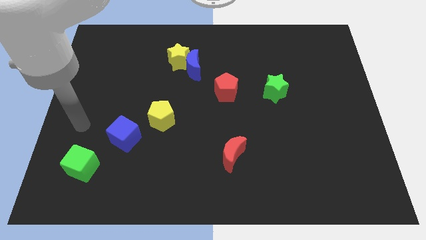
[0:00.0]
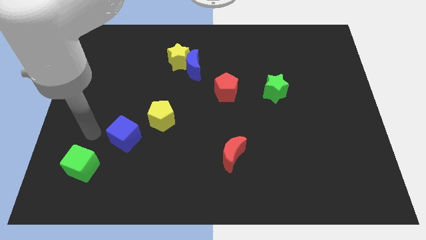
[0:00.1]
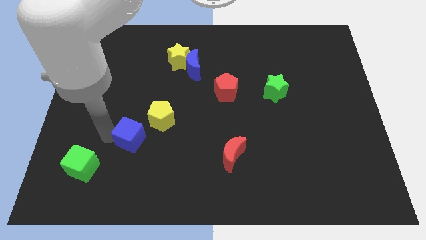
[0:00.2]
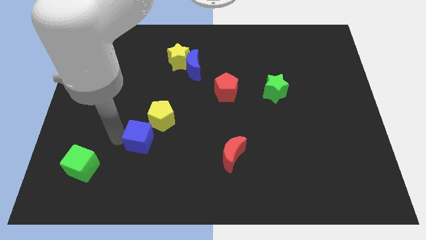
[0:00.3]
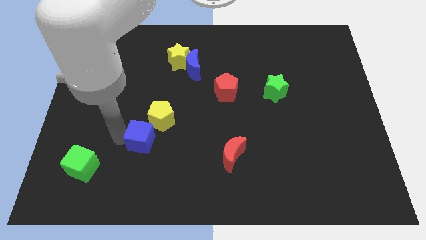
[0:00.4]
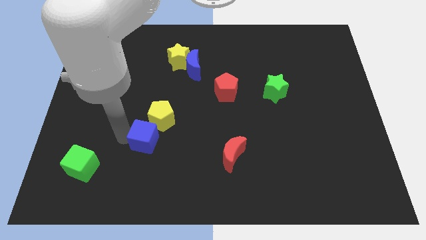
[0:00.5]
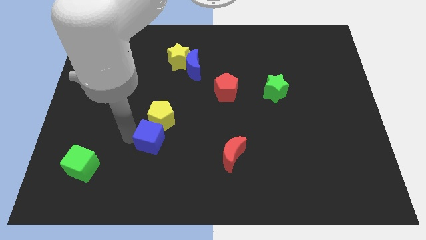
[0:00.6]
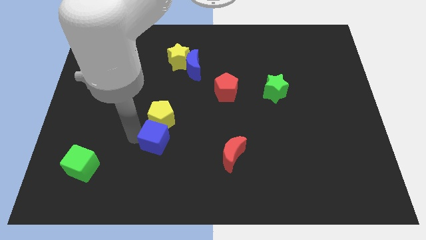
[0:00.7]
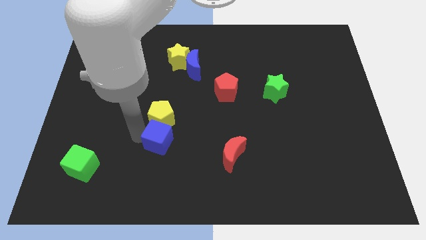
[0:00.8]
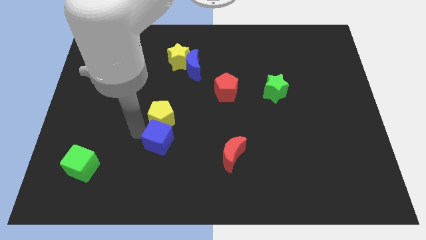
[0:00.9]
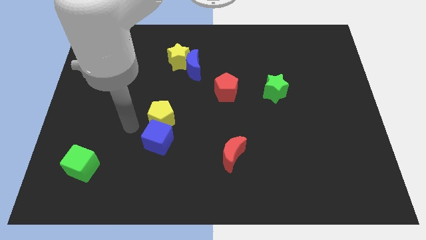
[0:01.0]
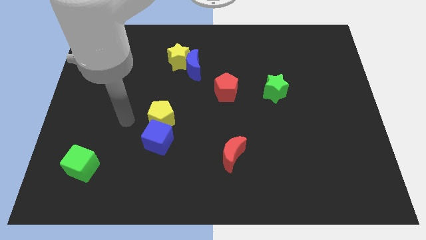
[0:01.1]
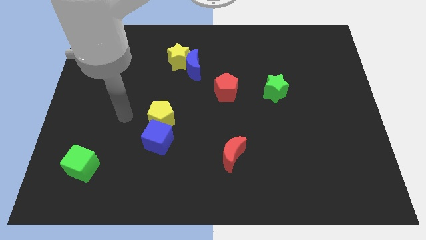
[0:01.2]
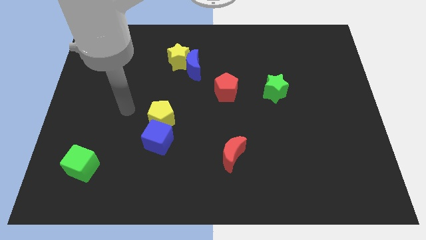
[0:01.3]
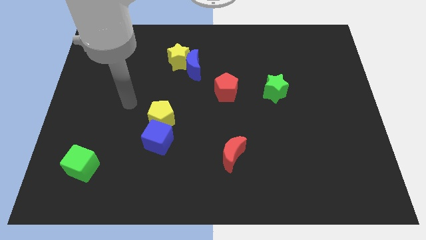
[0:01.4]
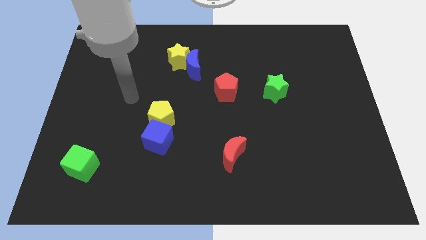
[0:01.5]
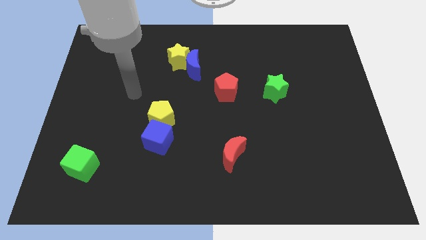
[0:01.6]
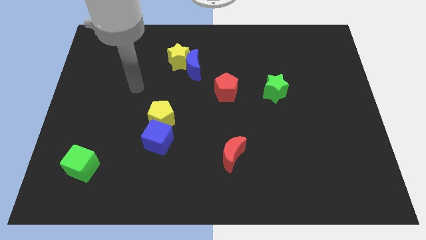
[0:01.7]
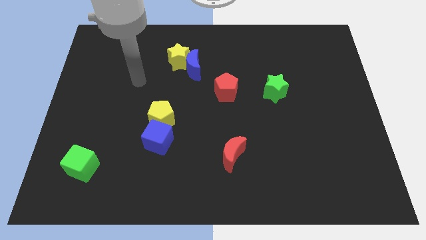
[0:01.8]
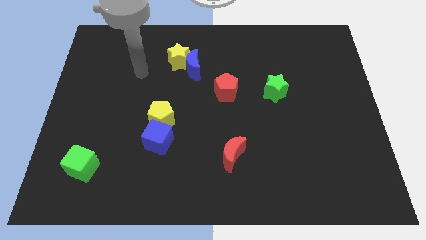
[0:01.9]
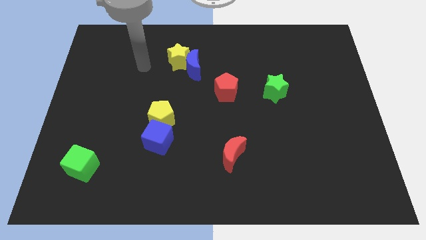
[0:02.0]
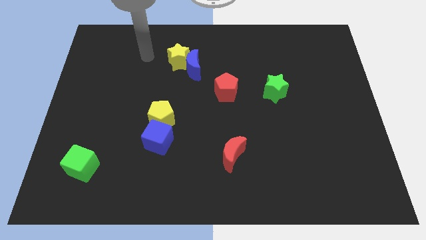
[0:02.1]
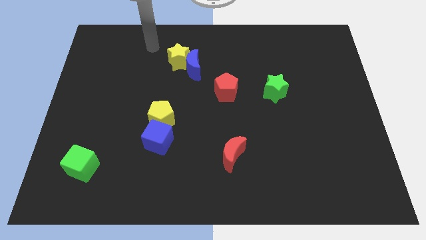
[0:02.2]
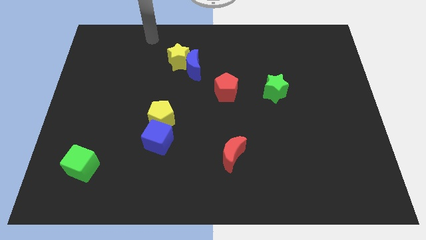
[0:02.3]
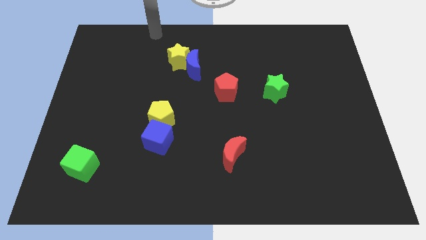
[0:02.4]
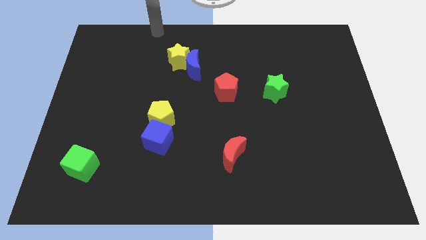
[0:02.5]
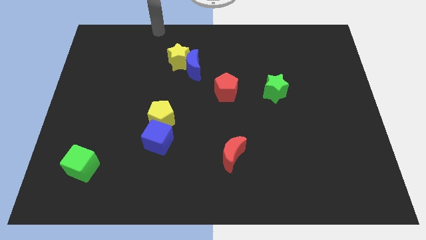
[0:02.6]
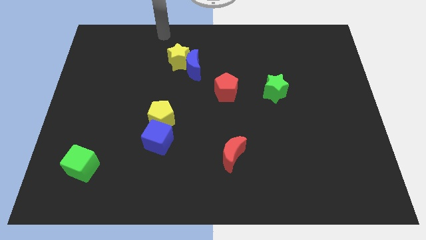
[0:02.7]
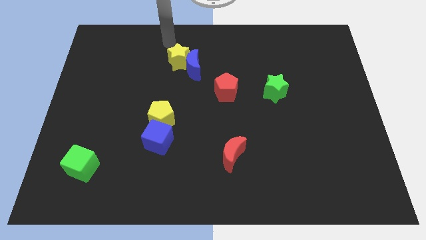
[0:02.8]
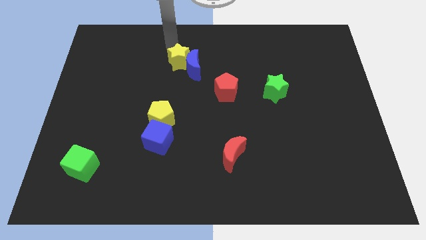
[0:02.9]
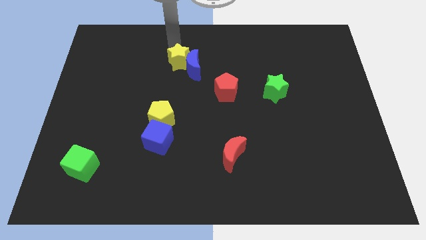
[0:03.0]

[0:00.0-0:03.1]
move the blue cube bottom of the yellow pentagon

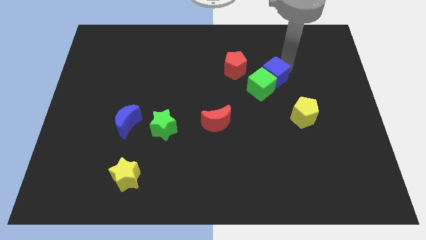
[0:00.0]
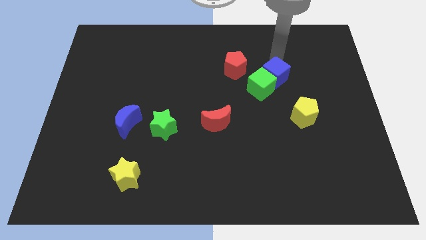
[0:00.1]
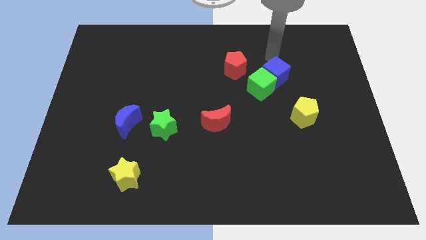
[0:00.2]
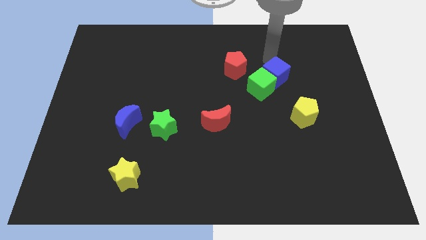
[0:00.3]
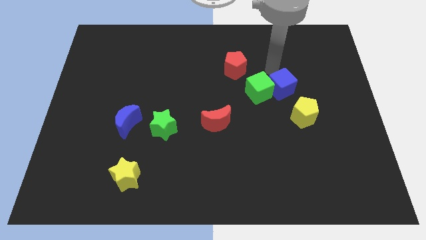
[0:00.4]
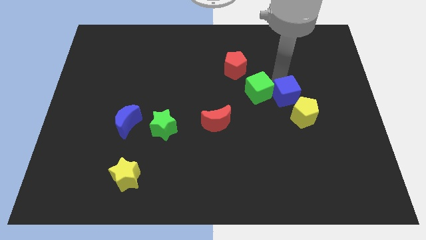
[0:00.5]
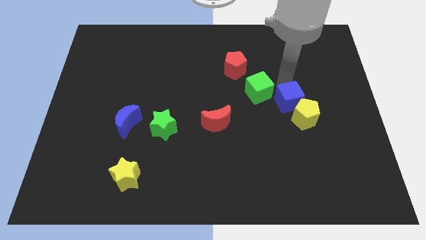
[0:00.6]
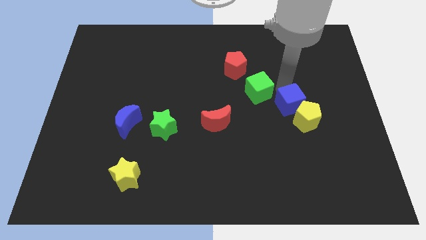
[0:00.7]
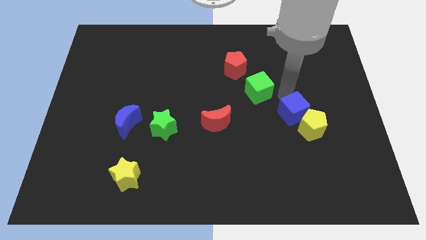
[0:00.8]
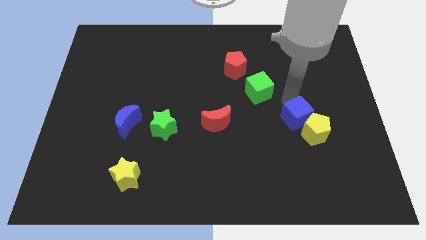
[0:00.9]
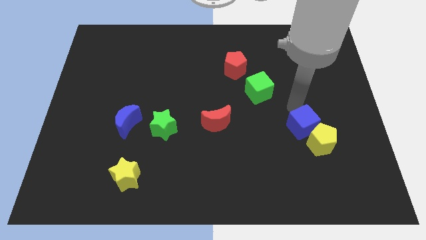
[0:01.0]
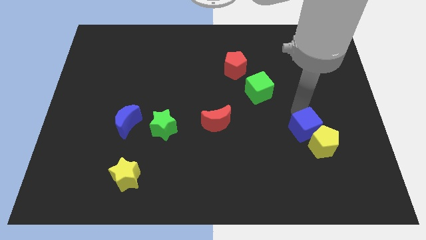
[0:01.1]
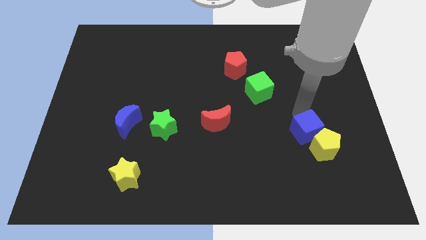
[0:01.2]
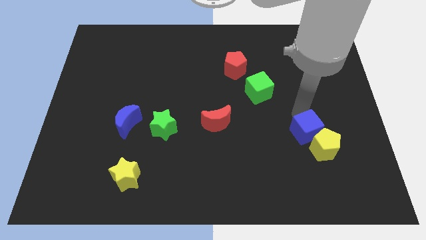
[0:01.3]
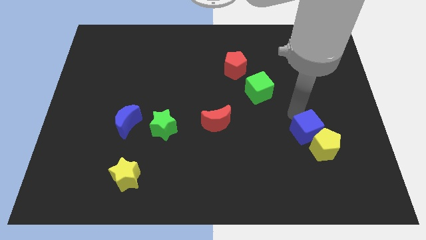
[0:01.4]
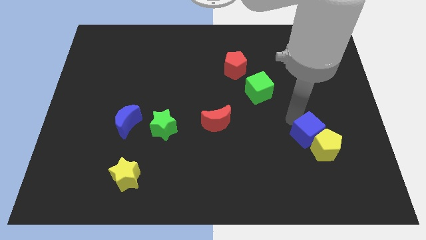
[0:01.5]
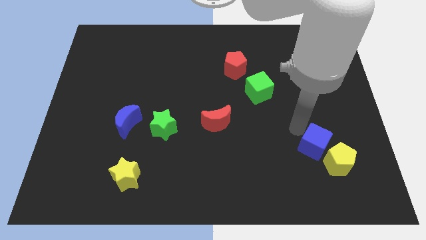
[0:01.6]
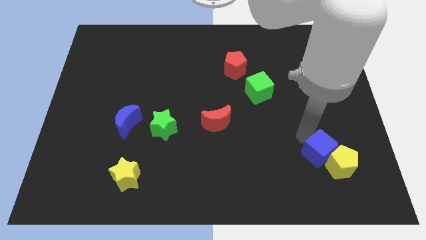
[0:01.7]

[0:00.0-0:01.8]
push the blue cube into the yellow pentagon

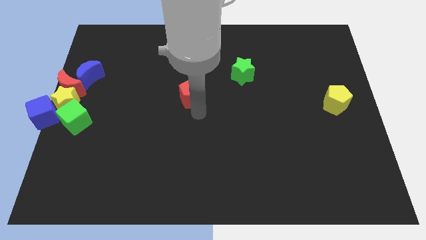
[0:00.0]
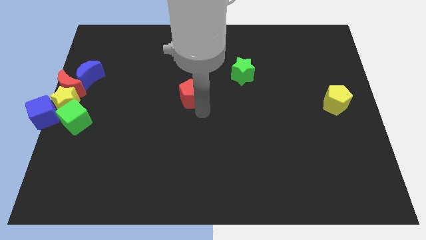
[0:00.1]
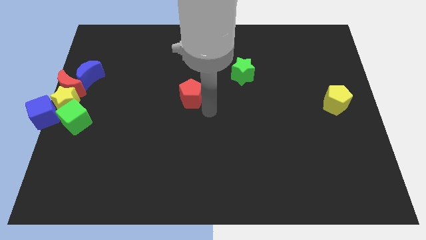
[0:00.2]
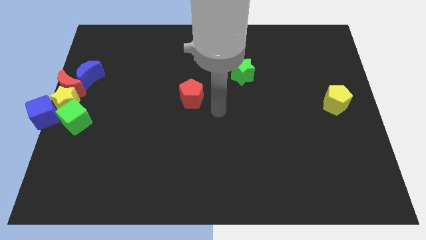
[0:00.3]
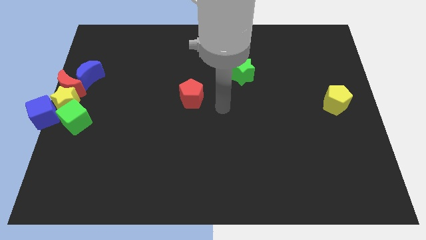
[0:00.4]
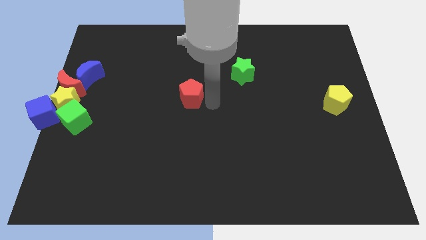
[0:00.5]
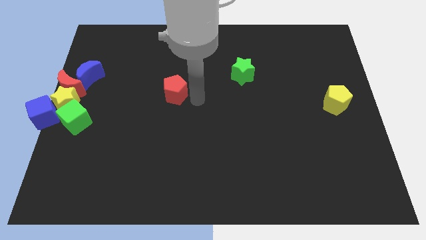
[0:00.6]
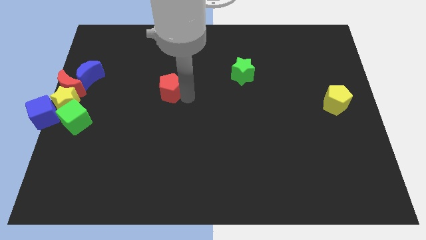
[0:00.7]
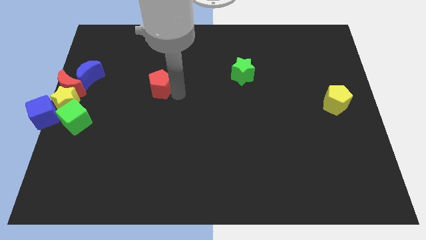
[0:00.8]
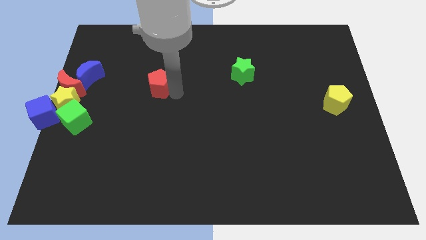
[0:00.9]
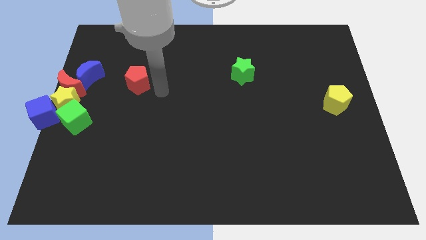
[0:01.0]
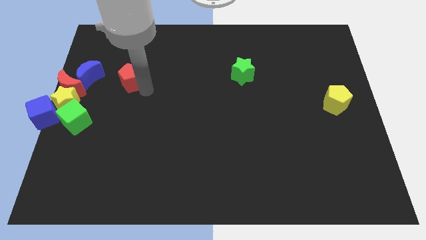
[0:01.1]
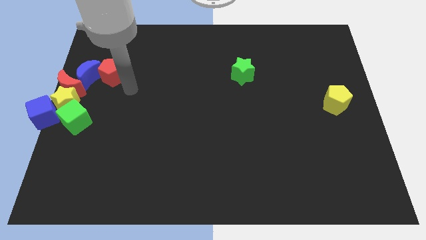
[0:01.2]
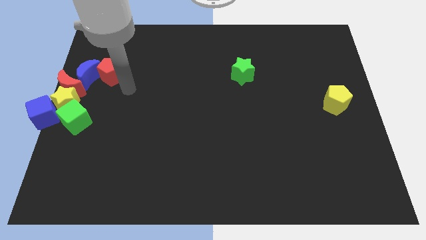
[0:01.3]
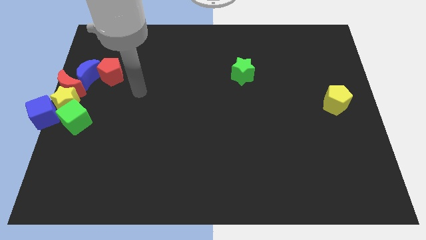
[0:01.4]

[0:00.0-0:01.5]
move the red pentagon at the right of the blue crescent

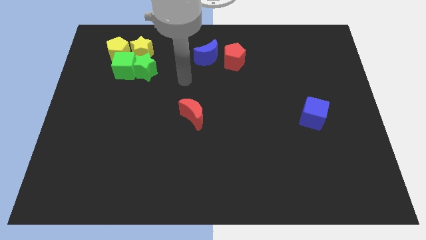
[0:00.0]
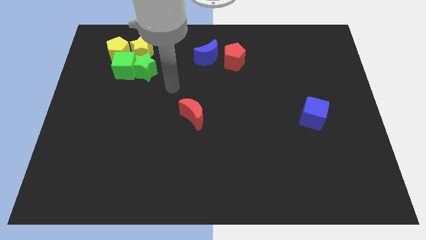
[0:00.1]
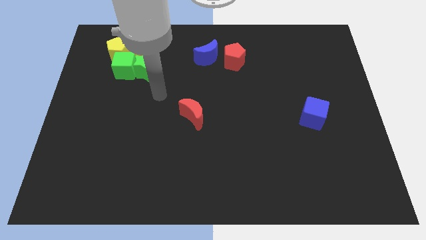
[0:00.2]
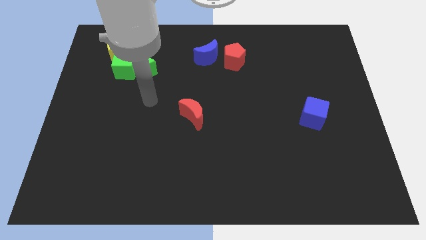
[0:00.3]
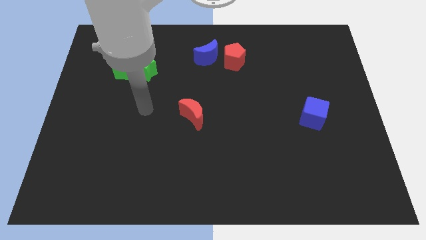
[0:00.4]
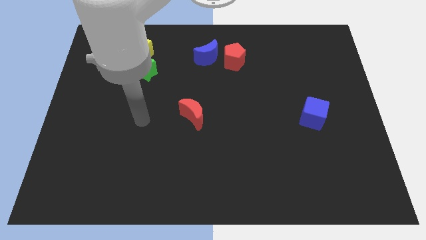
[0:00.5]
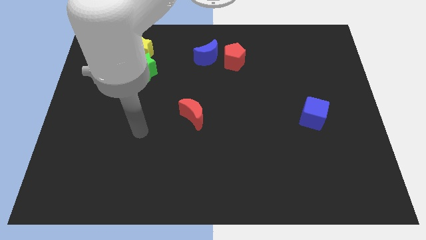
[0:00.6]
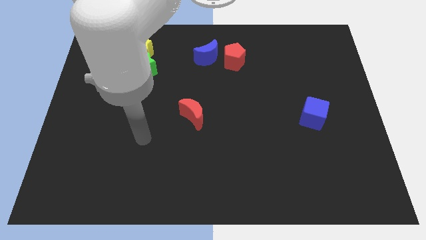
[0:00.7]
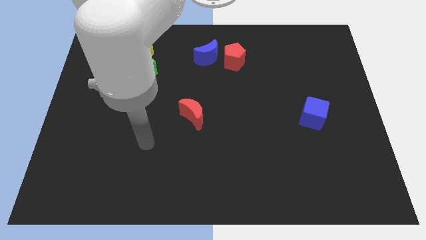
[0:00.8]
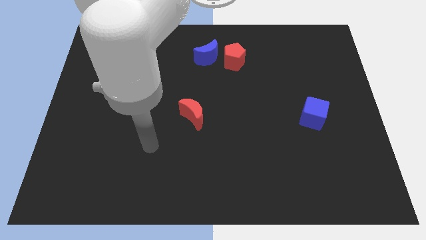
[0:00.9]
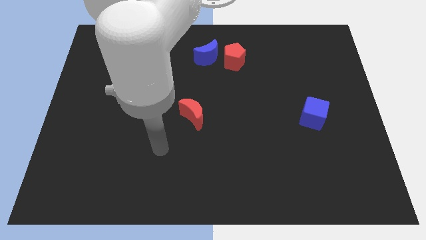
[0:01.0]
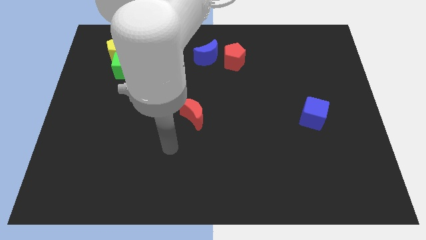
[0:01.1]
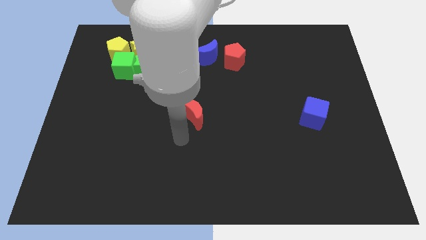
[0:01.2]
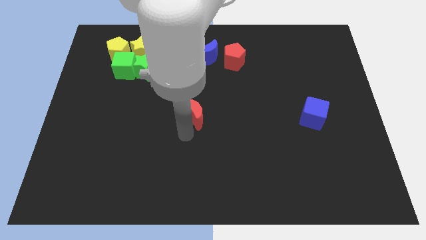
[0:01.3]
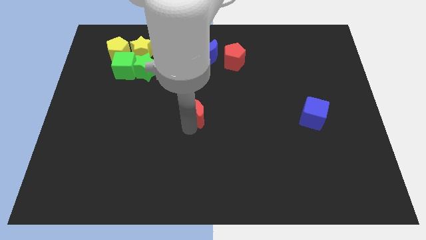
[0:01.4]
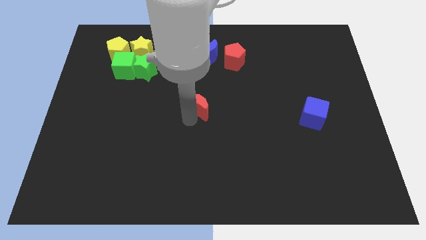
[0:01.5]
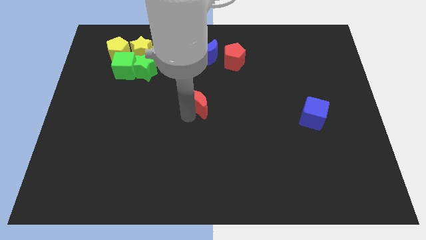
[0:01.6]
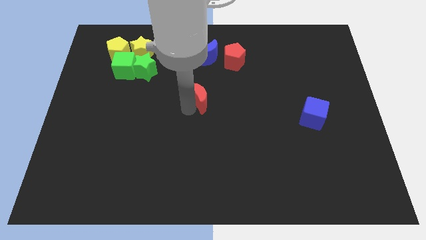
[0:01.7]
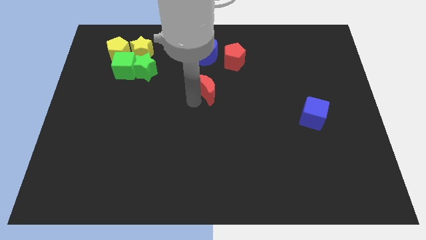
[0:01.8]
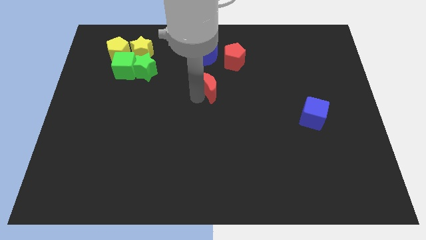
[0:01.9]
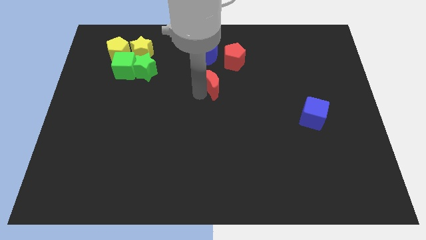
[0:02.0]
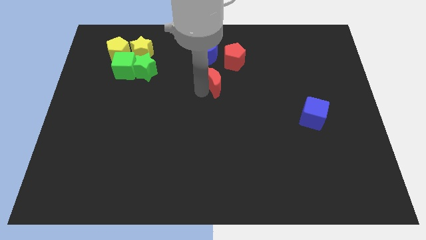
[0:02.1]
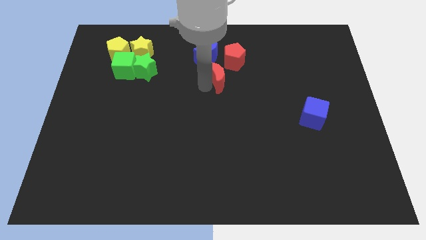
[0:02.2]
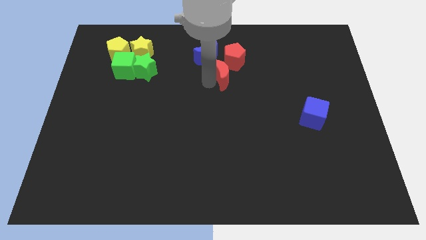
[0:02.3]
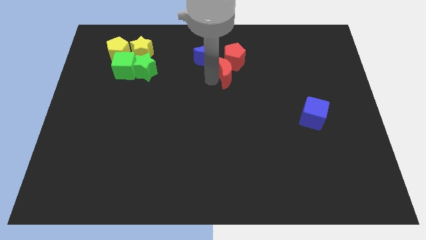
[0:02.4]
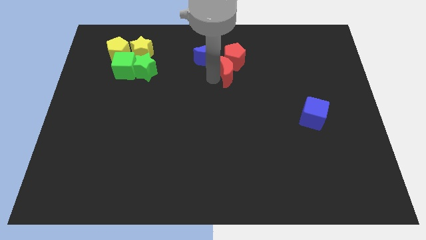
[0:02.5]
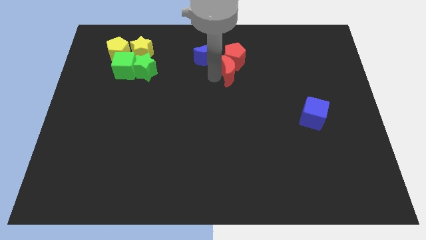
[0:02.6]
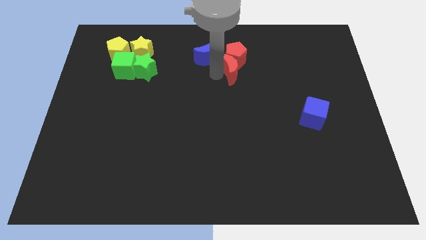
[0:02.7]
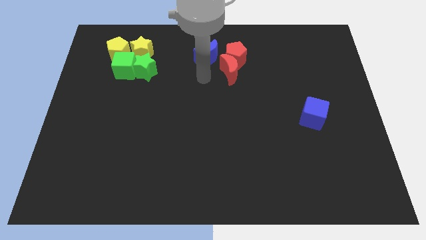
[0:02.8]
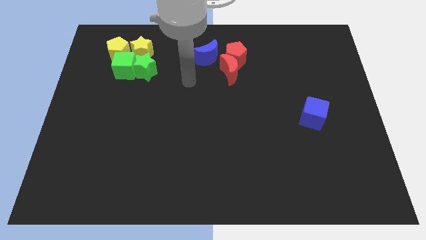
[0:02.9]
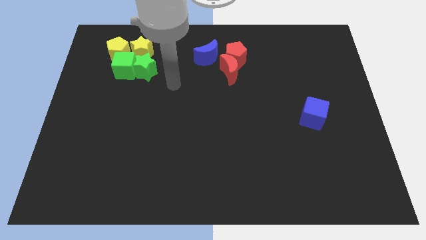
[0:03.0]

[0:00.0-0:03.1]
move the red crescent into the red pentagon
